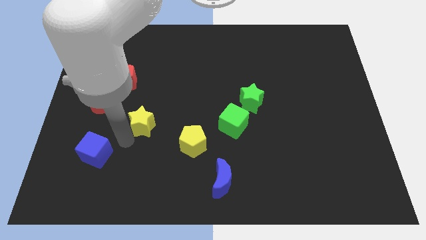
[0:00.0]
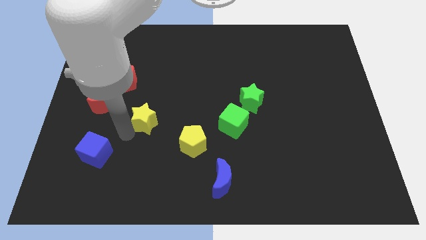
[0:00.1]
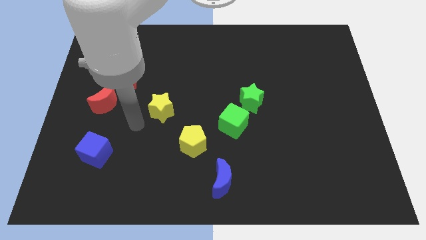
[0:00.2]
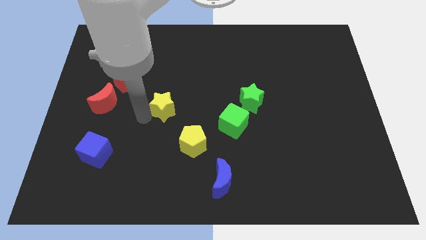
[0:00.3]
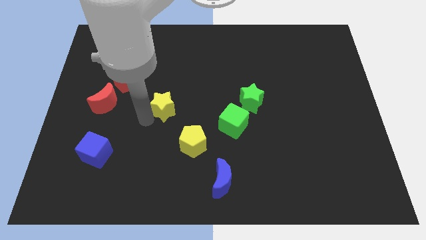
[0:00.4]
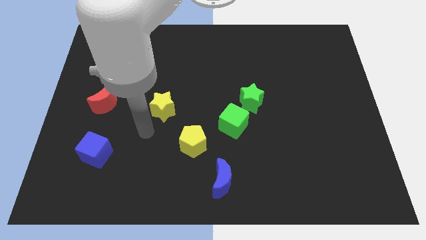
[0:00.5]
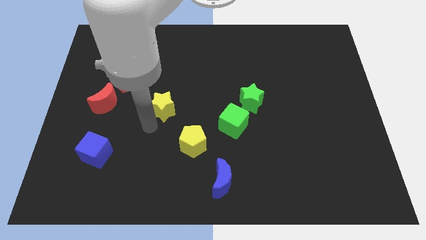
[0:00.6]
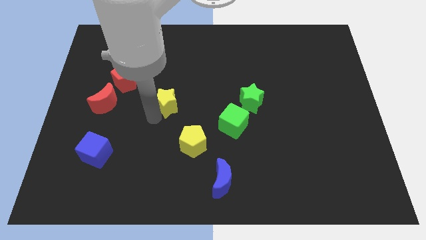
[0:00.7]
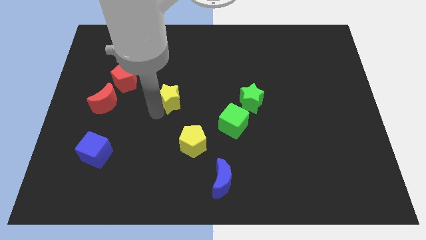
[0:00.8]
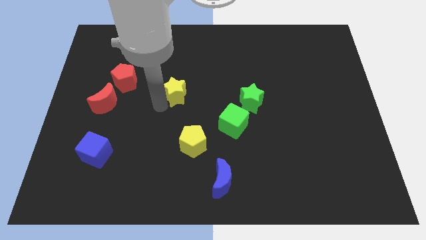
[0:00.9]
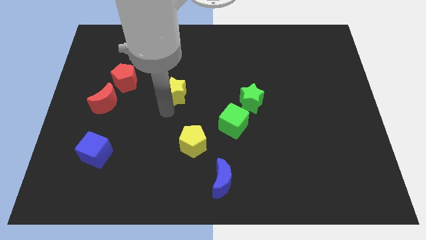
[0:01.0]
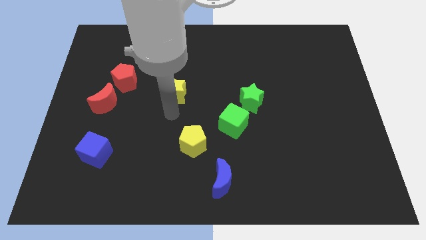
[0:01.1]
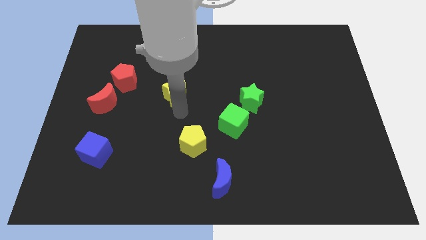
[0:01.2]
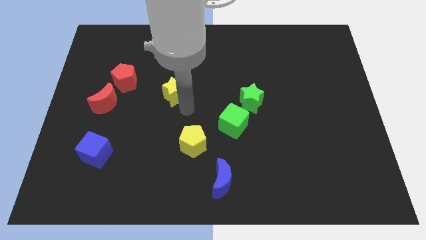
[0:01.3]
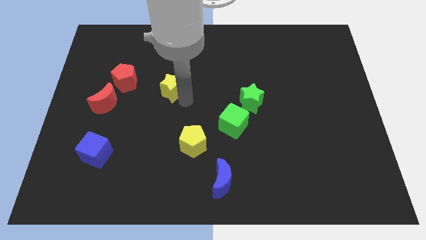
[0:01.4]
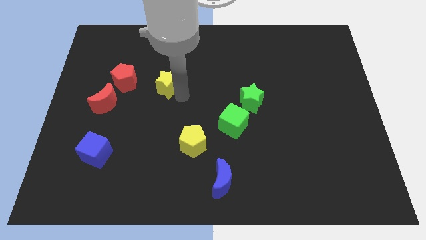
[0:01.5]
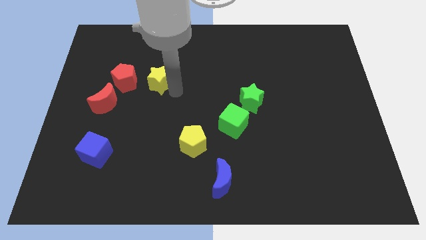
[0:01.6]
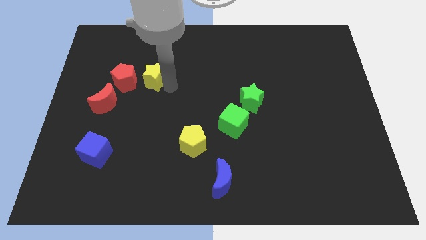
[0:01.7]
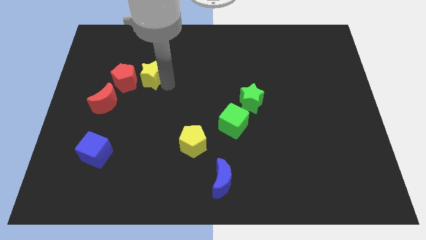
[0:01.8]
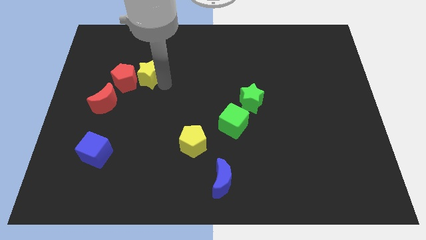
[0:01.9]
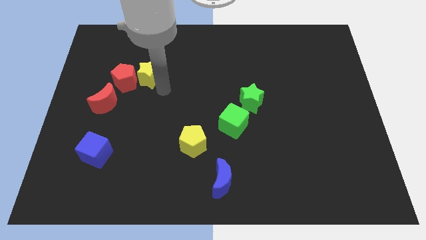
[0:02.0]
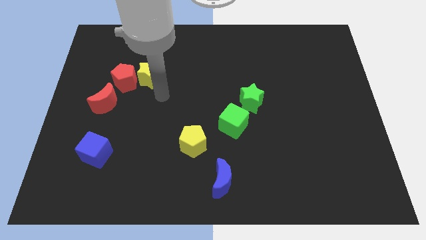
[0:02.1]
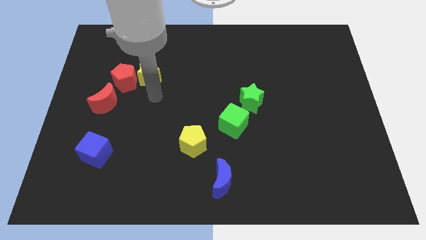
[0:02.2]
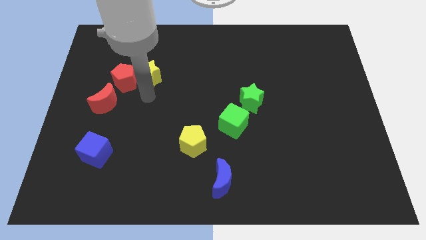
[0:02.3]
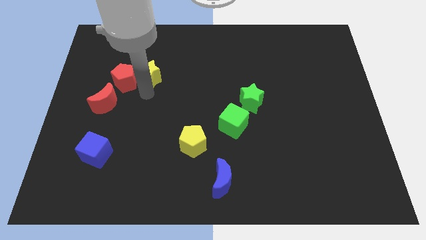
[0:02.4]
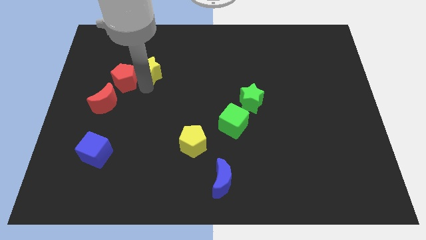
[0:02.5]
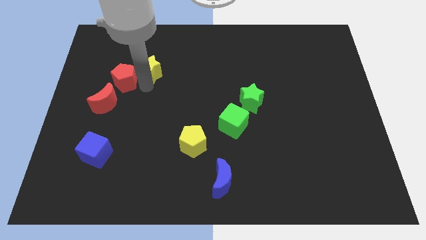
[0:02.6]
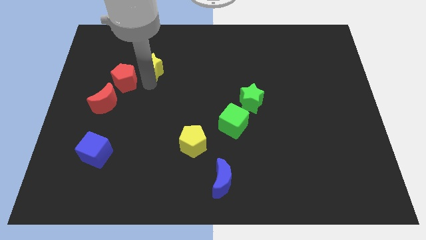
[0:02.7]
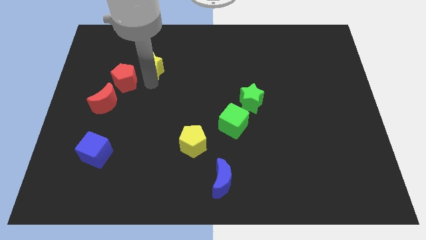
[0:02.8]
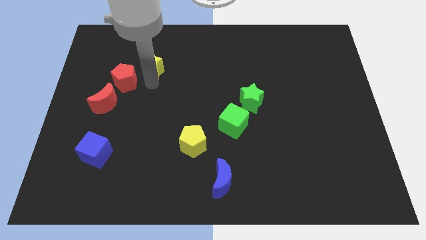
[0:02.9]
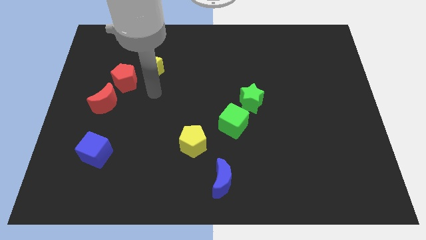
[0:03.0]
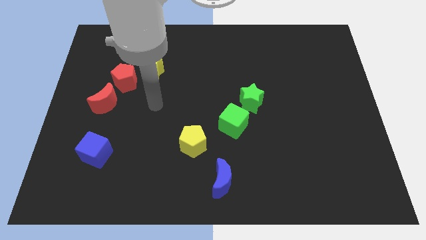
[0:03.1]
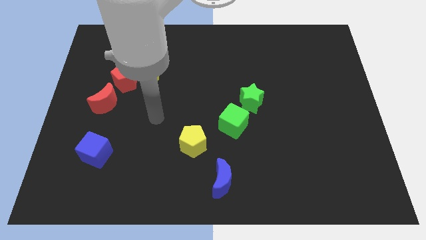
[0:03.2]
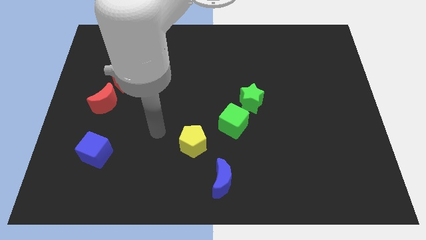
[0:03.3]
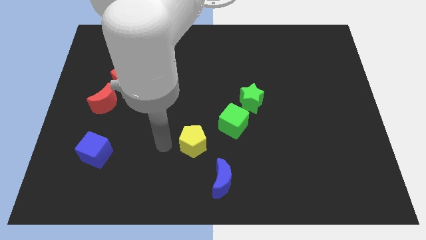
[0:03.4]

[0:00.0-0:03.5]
move the green star above the red pentagon

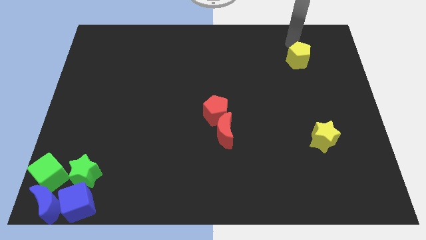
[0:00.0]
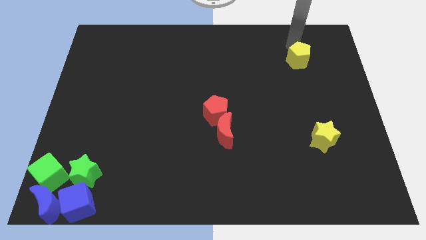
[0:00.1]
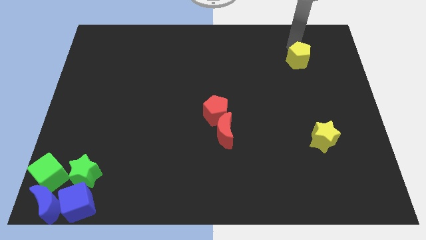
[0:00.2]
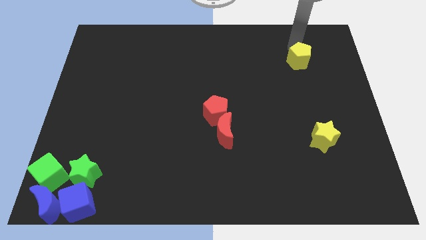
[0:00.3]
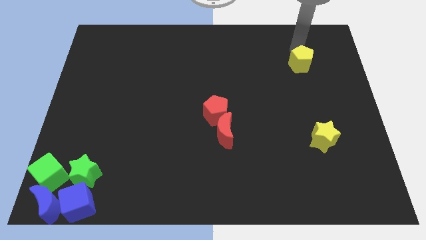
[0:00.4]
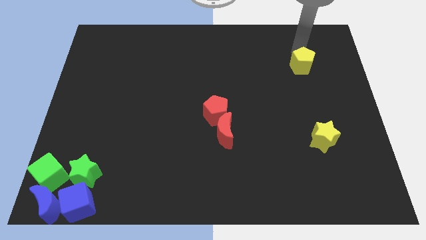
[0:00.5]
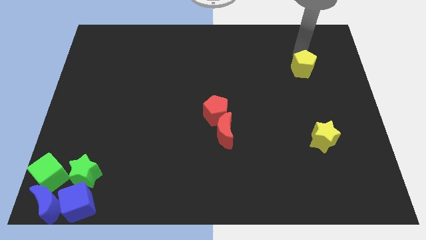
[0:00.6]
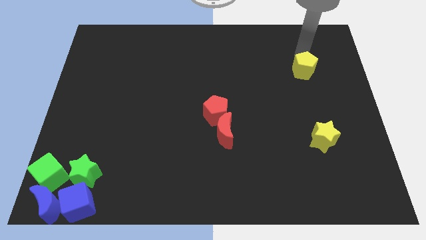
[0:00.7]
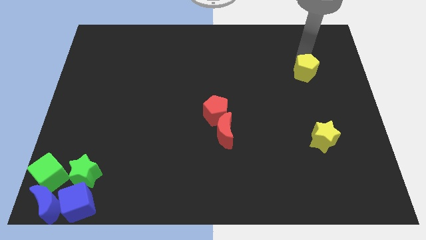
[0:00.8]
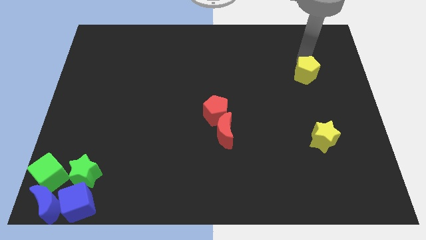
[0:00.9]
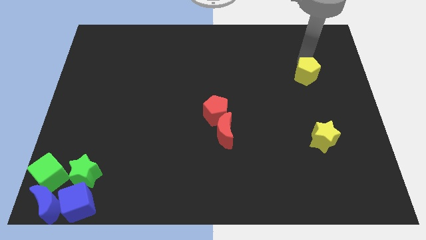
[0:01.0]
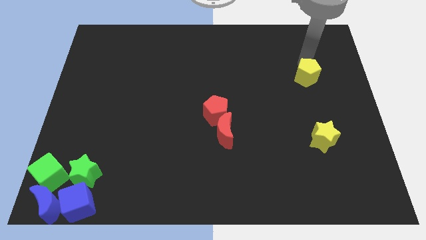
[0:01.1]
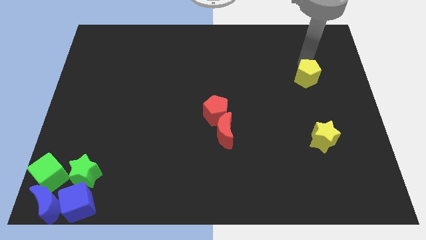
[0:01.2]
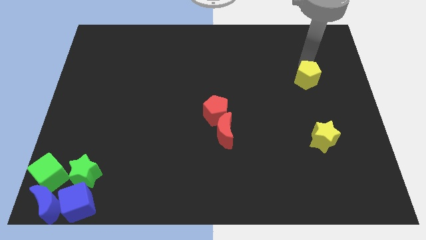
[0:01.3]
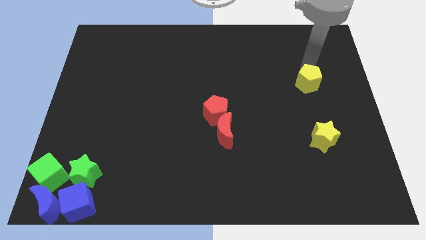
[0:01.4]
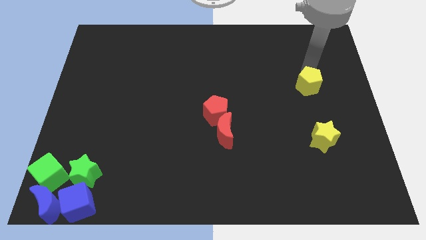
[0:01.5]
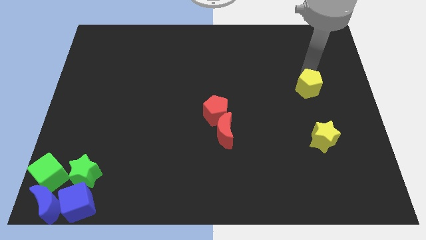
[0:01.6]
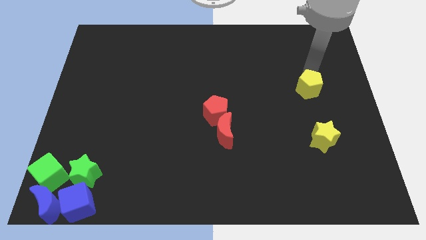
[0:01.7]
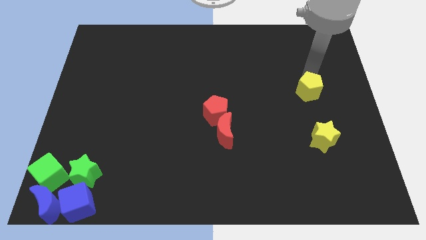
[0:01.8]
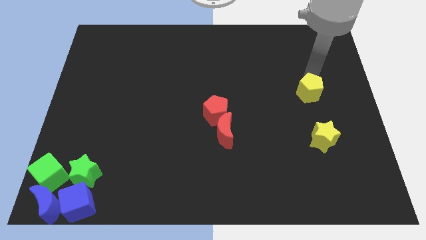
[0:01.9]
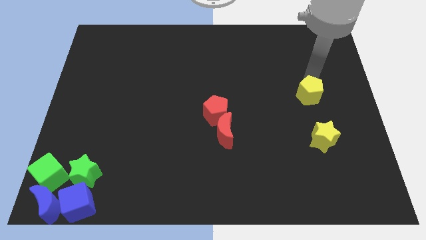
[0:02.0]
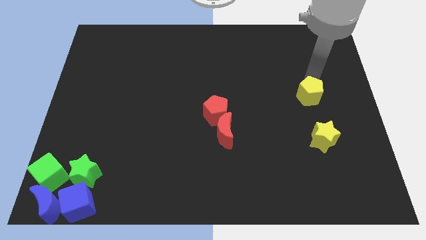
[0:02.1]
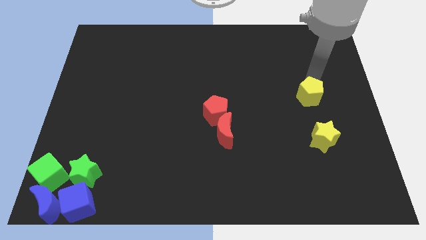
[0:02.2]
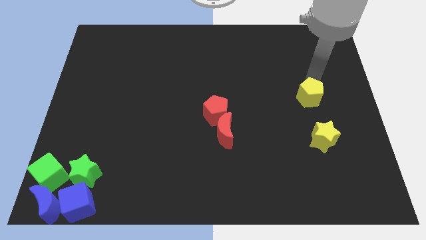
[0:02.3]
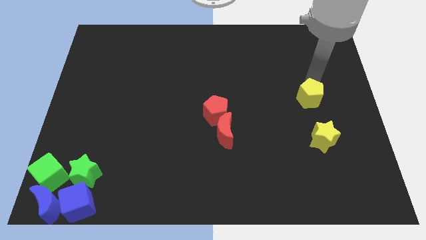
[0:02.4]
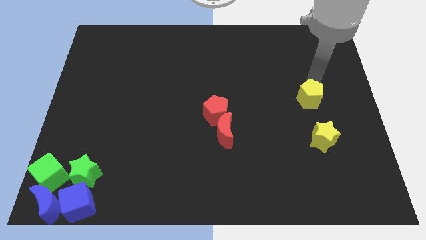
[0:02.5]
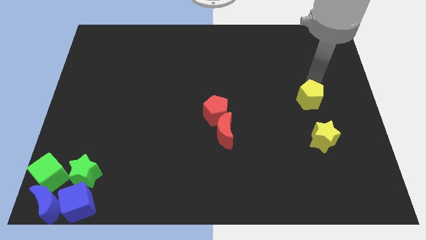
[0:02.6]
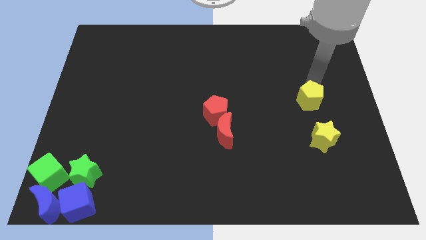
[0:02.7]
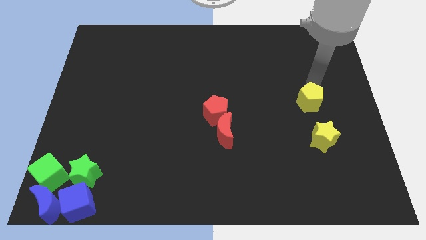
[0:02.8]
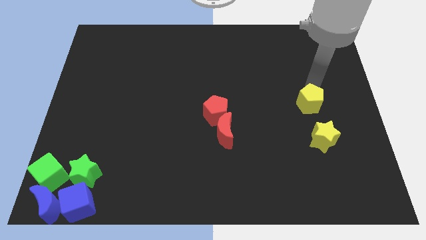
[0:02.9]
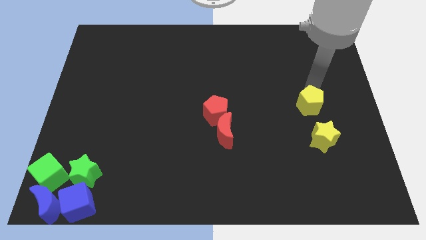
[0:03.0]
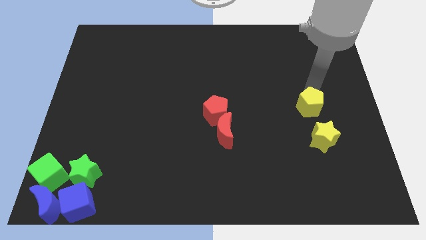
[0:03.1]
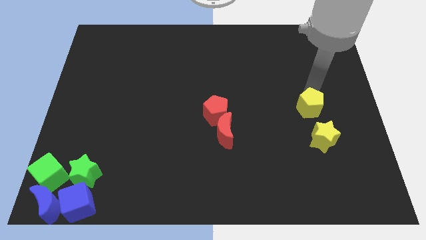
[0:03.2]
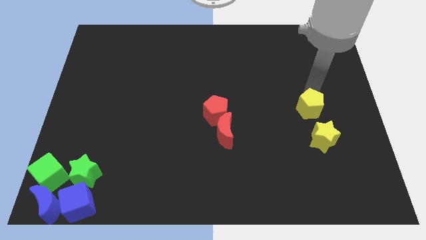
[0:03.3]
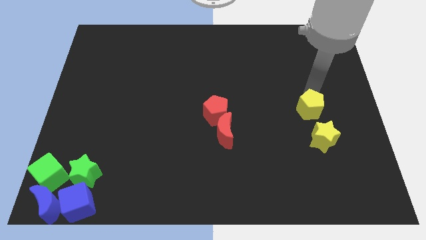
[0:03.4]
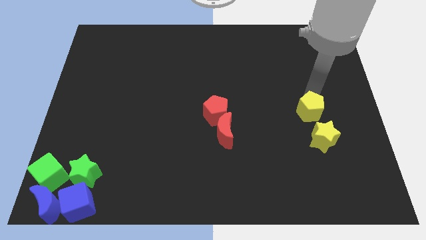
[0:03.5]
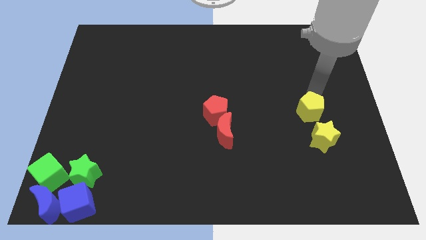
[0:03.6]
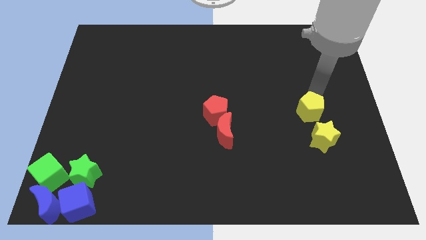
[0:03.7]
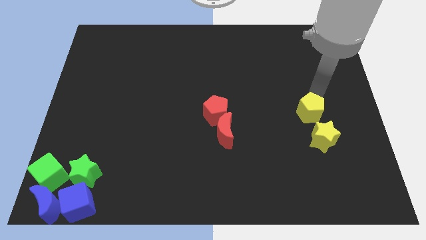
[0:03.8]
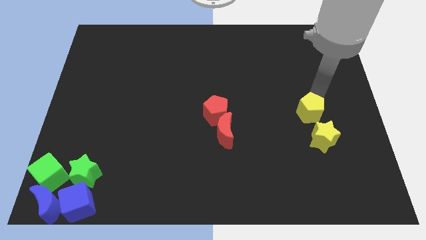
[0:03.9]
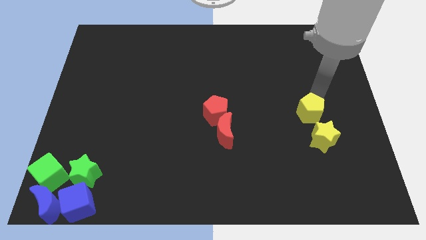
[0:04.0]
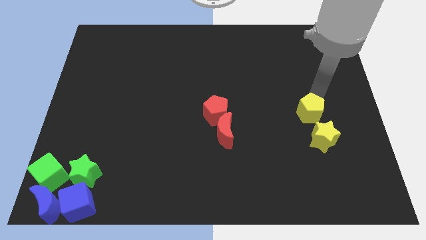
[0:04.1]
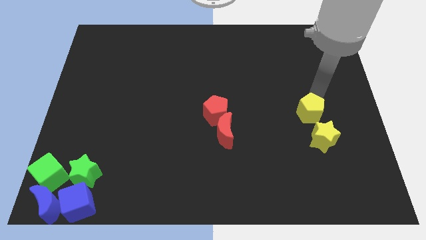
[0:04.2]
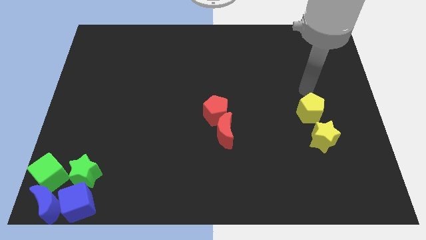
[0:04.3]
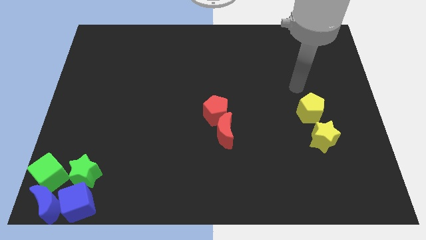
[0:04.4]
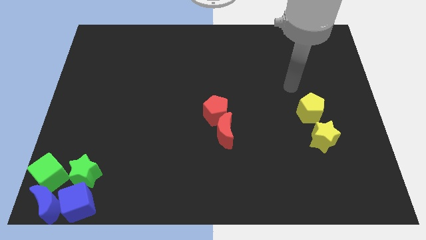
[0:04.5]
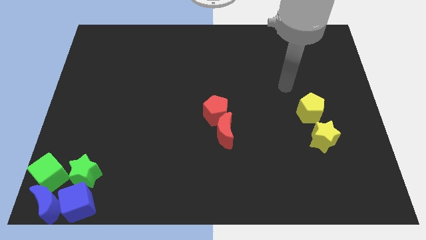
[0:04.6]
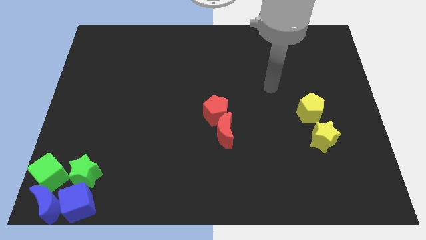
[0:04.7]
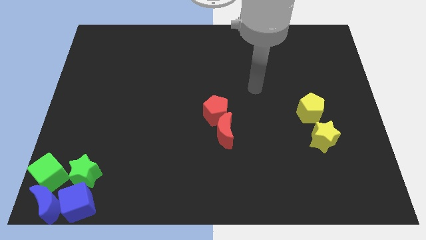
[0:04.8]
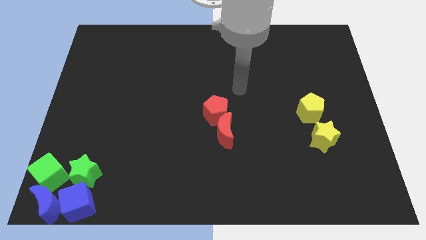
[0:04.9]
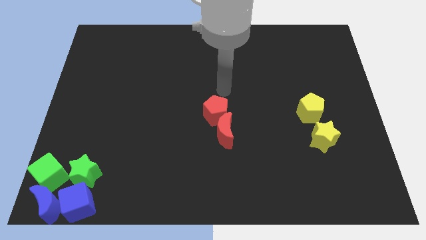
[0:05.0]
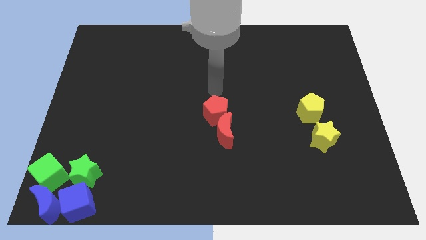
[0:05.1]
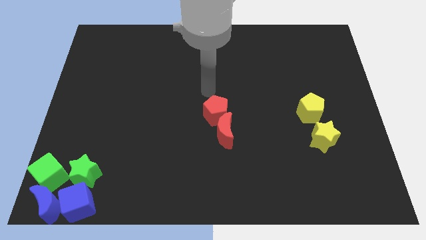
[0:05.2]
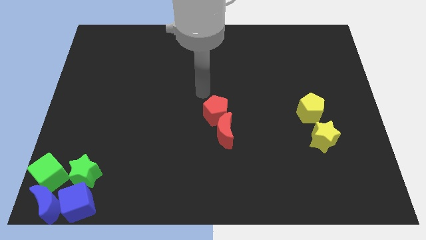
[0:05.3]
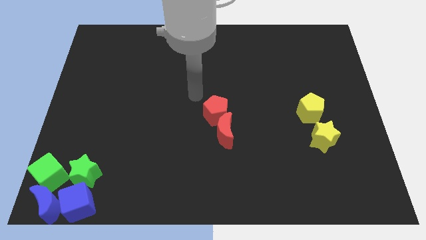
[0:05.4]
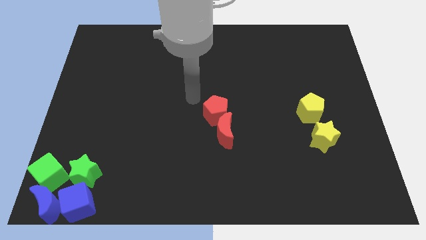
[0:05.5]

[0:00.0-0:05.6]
place the yellow pentagon on left side of the yellow star

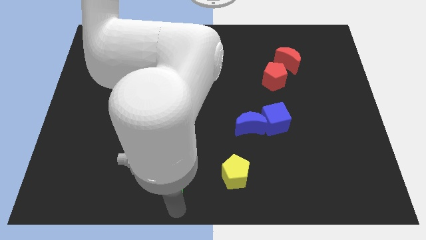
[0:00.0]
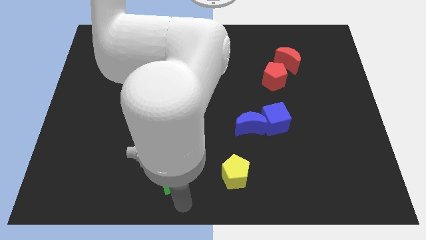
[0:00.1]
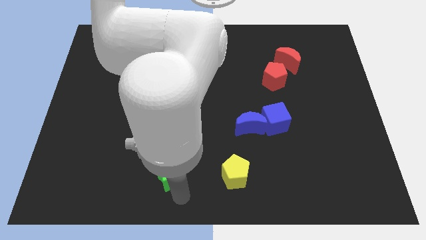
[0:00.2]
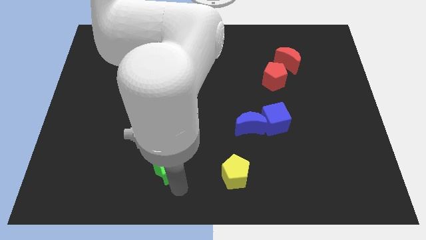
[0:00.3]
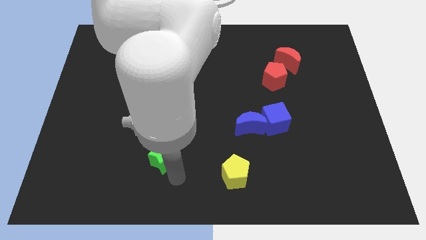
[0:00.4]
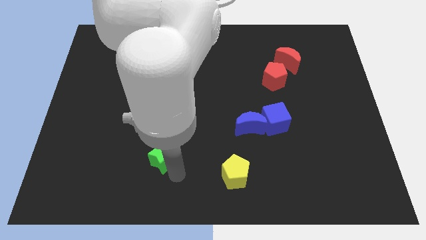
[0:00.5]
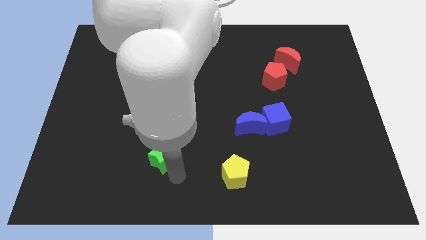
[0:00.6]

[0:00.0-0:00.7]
push green star slightly towards top
